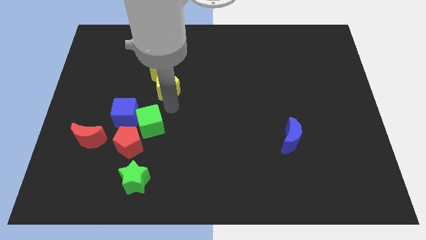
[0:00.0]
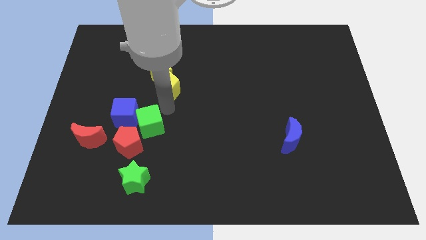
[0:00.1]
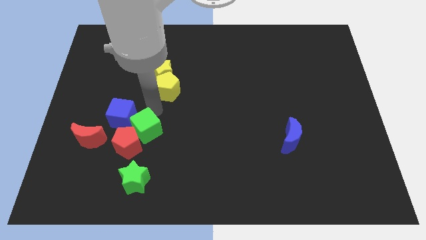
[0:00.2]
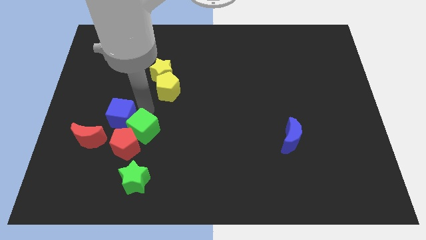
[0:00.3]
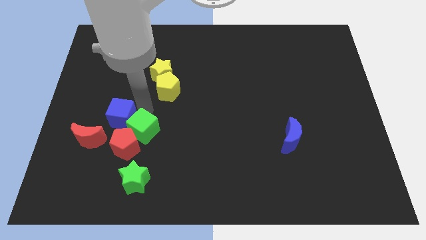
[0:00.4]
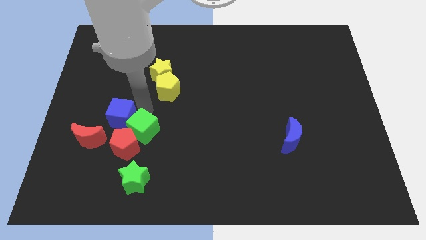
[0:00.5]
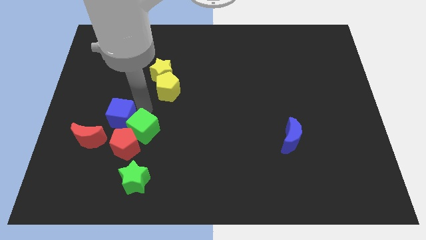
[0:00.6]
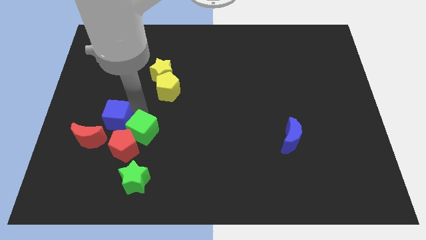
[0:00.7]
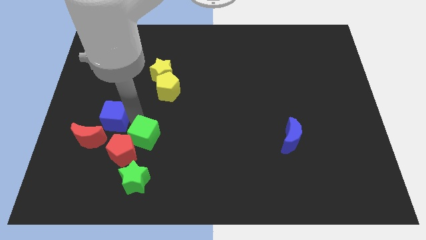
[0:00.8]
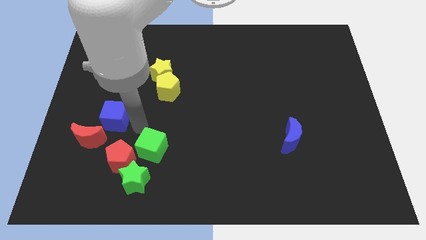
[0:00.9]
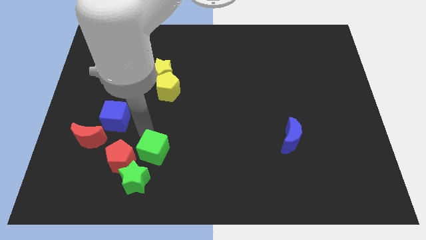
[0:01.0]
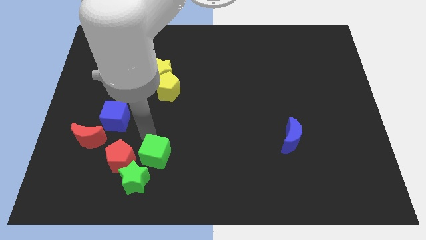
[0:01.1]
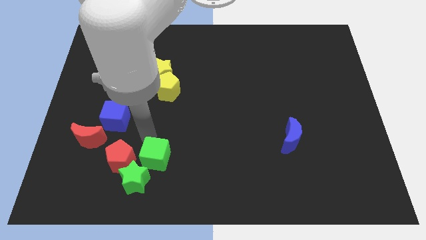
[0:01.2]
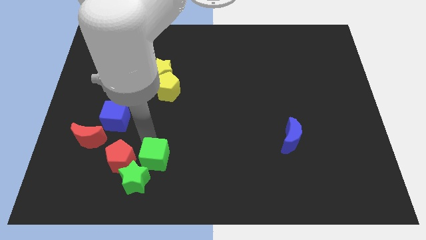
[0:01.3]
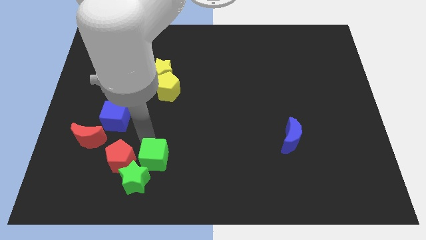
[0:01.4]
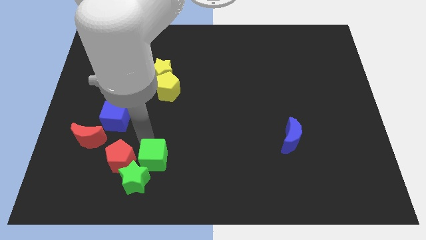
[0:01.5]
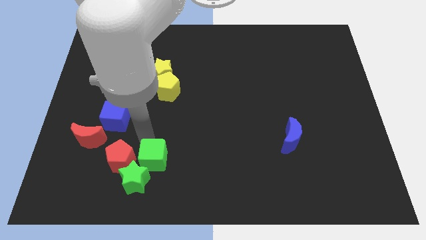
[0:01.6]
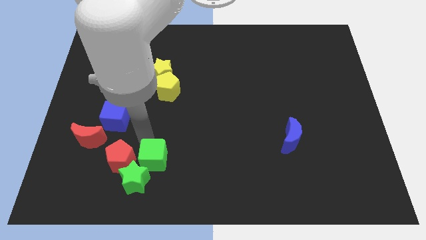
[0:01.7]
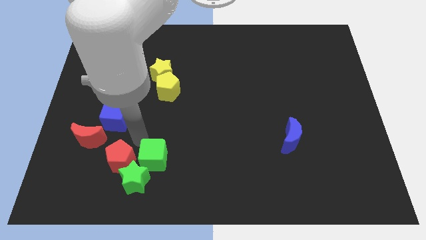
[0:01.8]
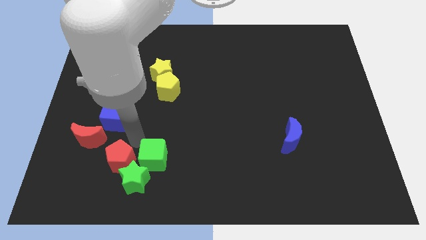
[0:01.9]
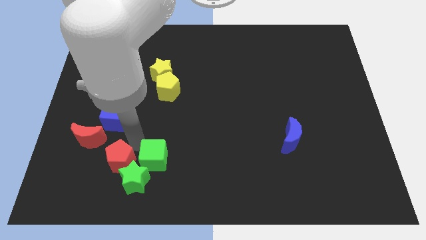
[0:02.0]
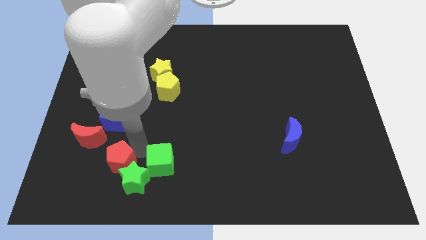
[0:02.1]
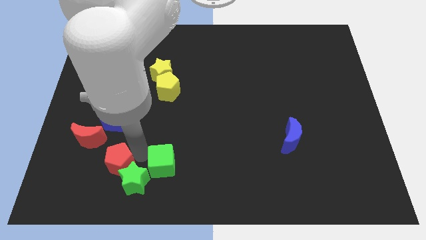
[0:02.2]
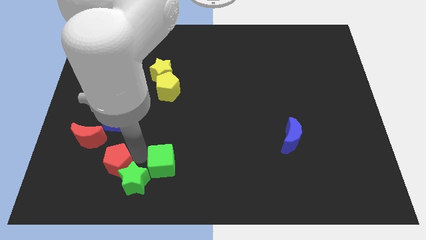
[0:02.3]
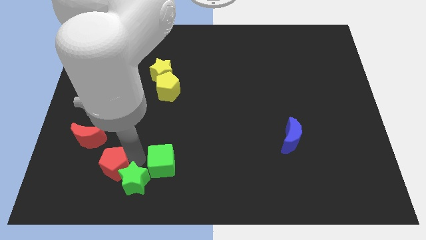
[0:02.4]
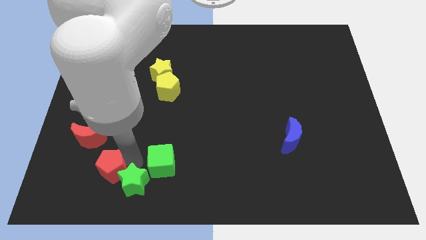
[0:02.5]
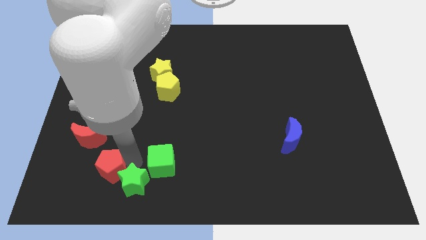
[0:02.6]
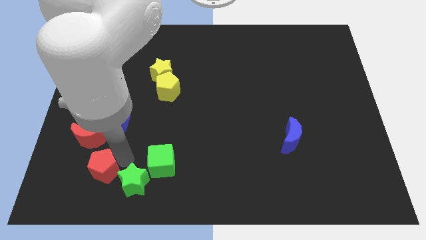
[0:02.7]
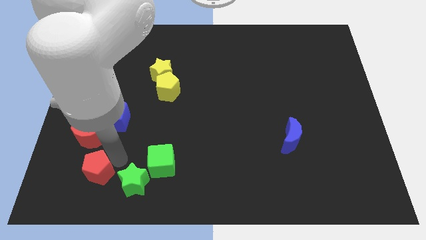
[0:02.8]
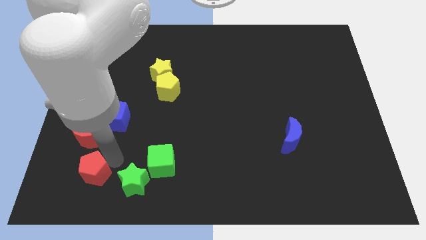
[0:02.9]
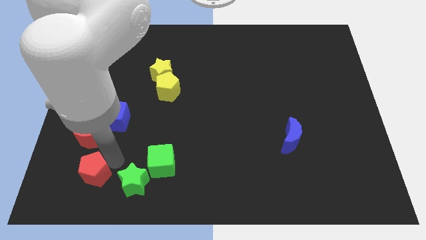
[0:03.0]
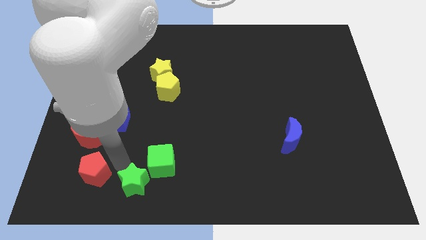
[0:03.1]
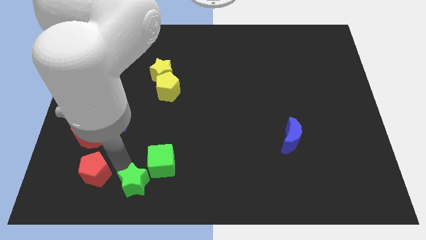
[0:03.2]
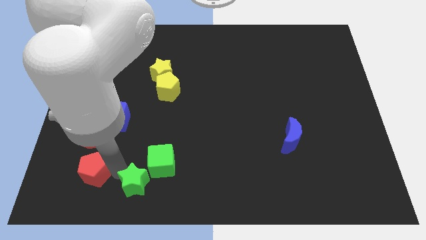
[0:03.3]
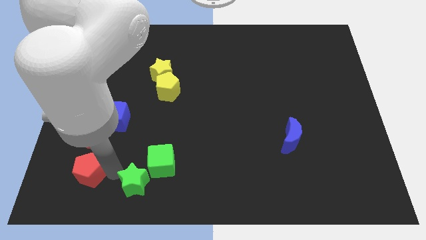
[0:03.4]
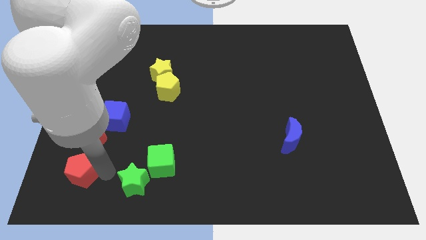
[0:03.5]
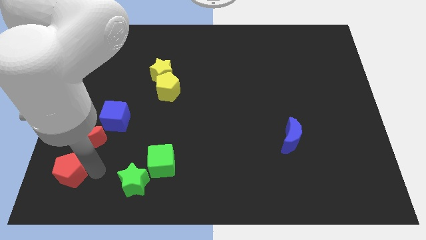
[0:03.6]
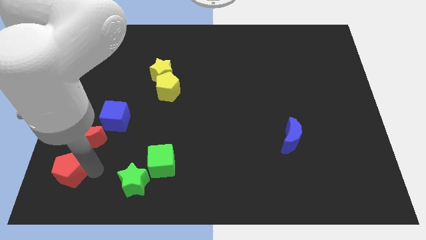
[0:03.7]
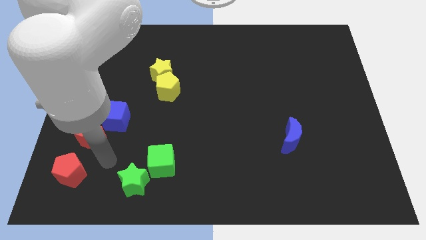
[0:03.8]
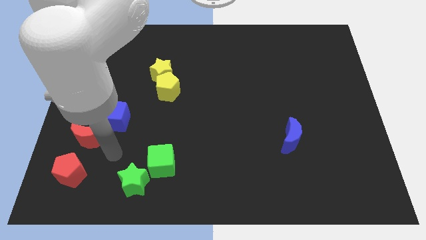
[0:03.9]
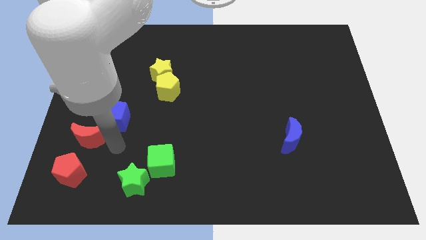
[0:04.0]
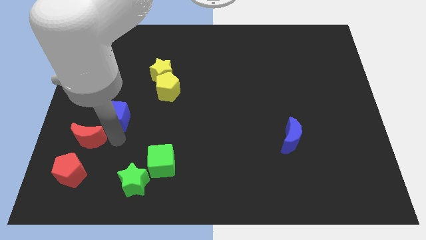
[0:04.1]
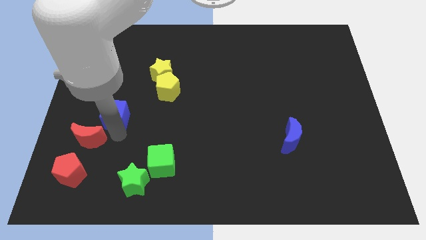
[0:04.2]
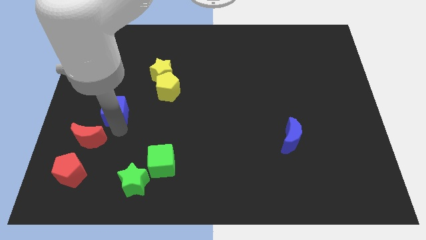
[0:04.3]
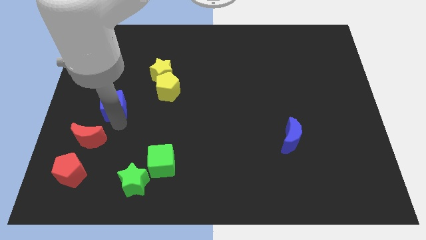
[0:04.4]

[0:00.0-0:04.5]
separate the green blocks and red blocks

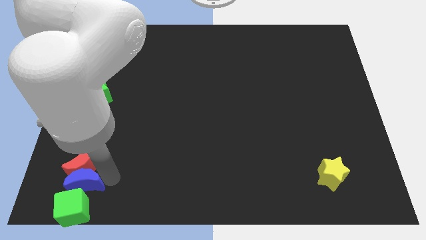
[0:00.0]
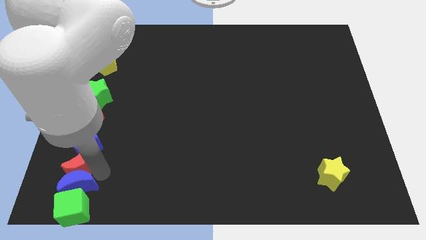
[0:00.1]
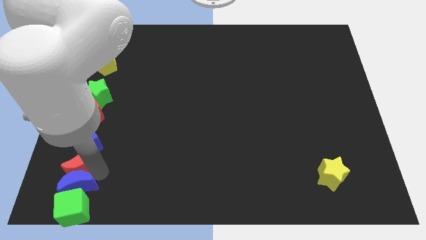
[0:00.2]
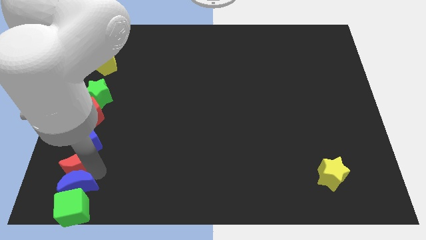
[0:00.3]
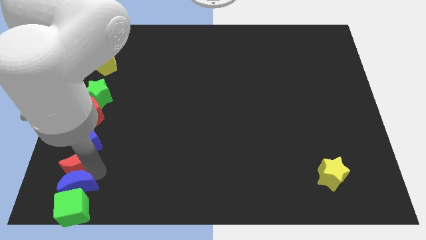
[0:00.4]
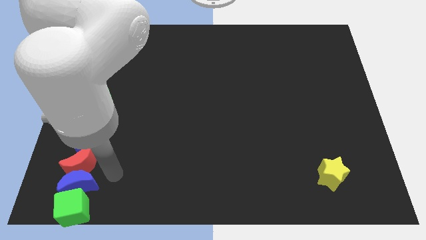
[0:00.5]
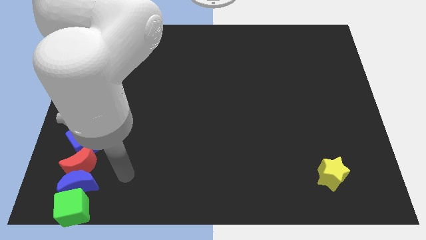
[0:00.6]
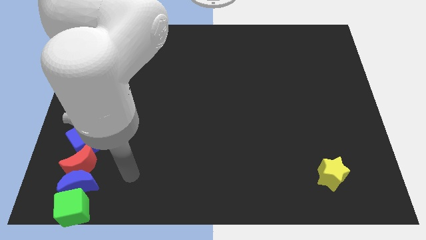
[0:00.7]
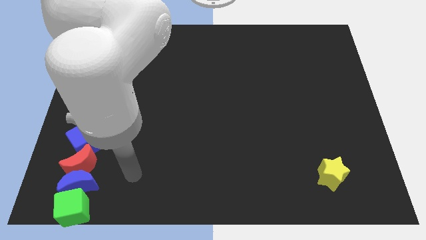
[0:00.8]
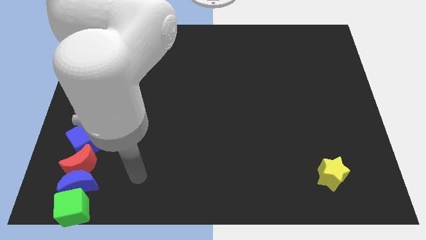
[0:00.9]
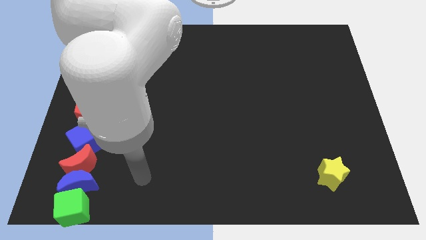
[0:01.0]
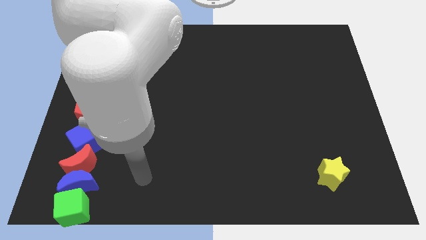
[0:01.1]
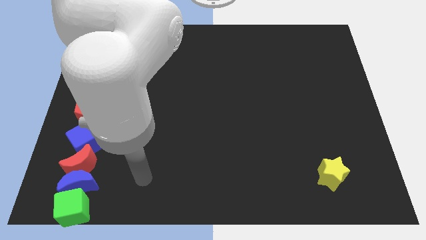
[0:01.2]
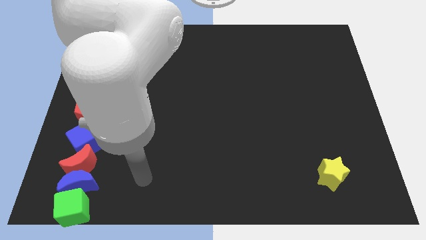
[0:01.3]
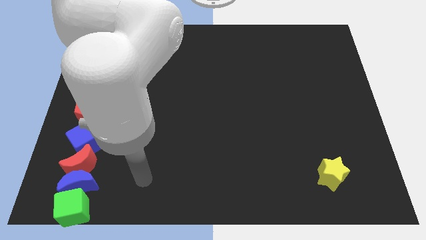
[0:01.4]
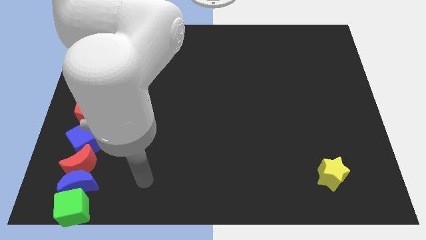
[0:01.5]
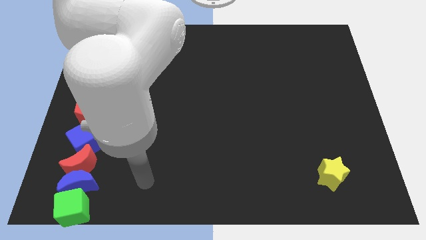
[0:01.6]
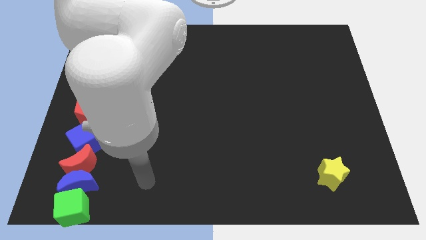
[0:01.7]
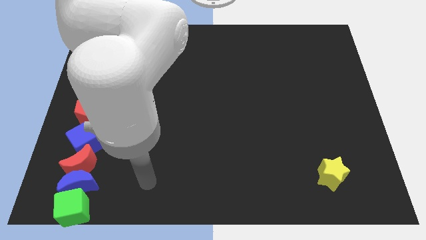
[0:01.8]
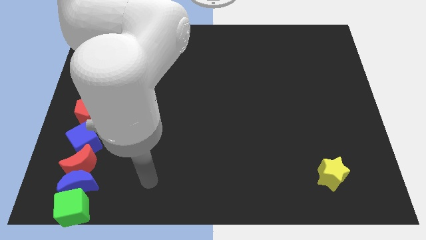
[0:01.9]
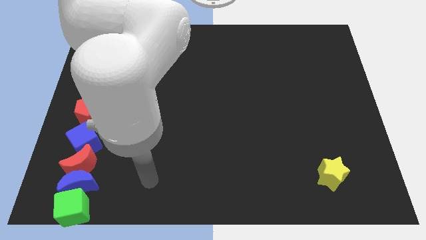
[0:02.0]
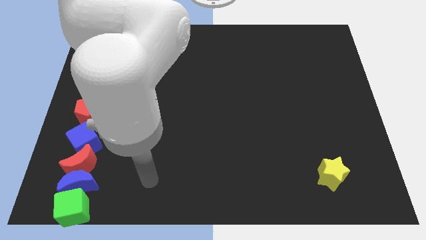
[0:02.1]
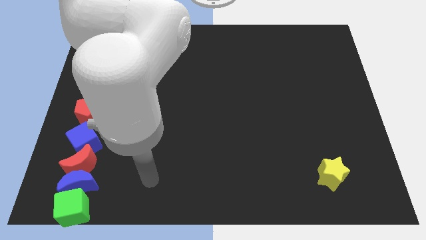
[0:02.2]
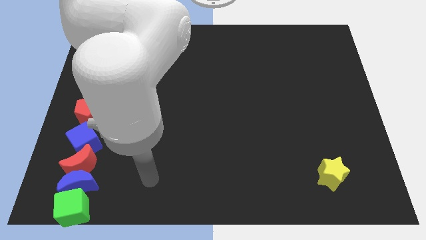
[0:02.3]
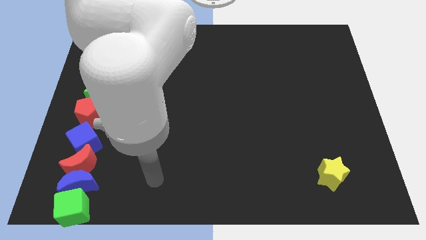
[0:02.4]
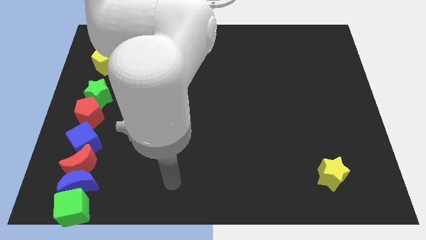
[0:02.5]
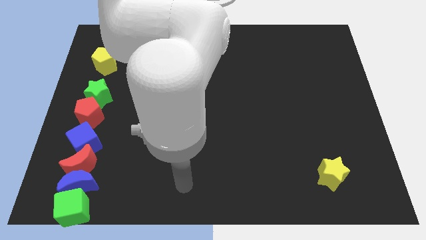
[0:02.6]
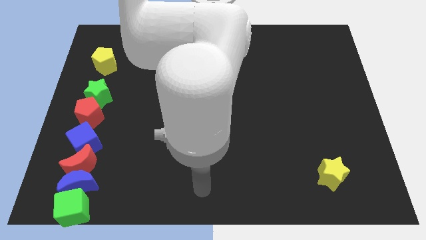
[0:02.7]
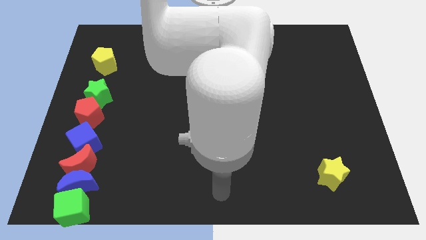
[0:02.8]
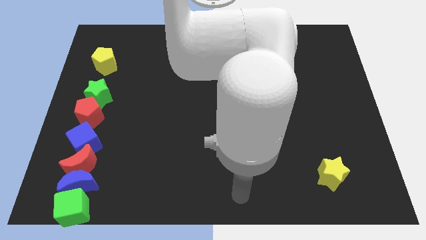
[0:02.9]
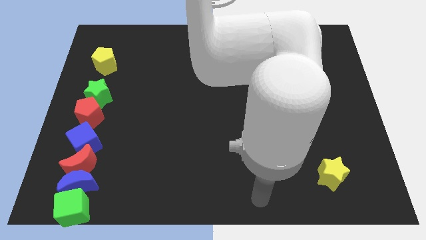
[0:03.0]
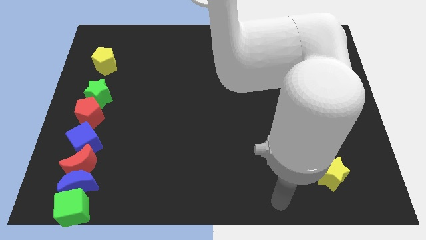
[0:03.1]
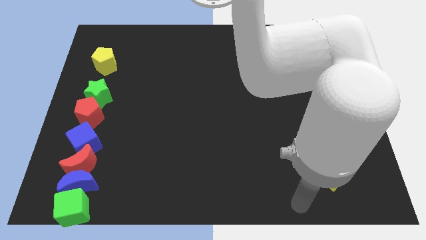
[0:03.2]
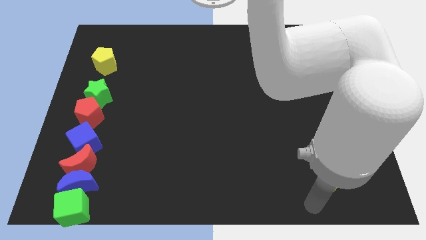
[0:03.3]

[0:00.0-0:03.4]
move the arm away from the red moon

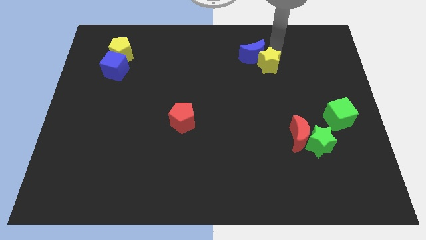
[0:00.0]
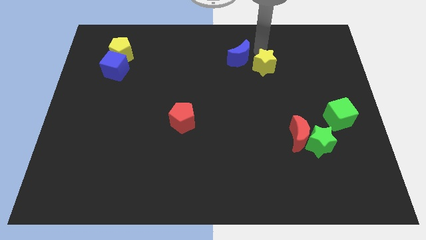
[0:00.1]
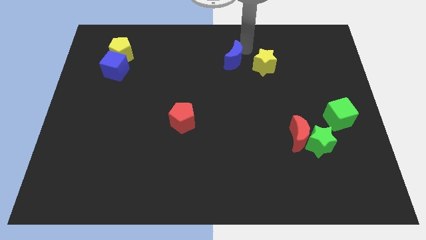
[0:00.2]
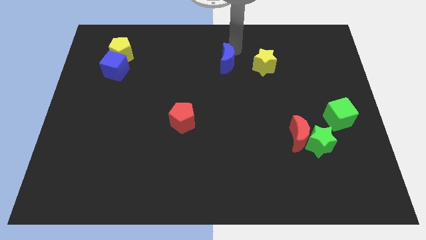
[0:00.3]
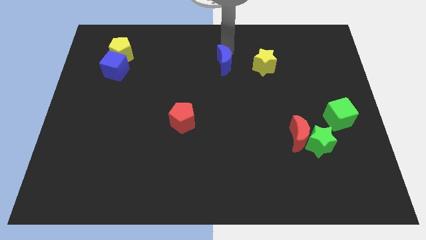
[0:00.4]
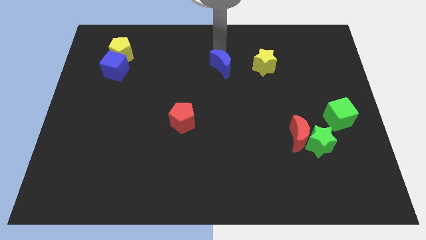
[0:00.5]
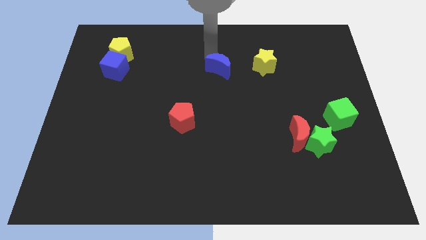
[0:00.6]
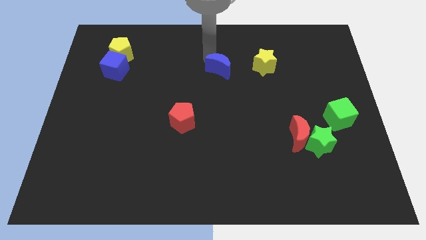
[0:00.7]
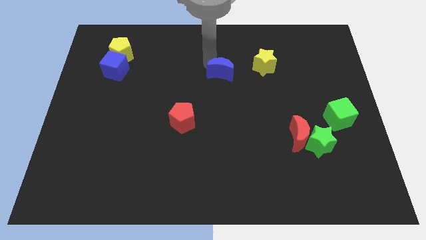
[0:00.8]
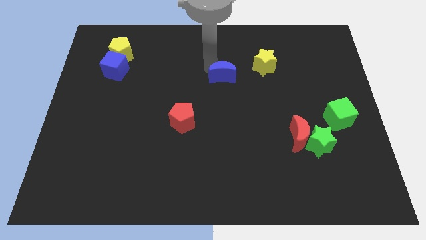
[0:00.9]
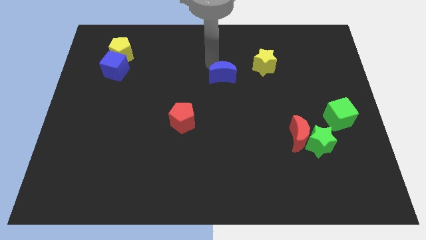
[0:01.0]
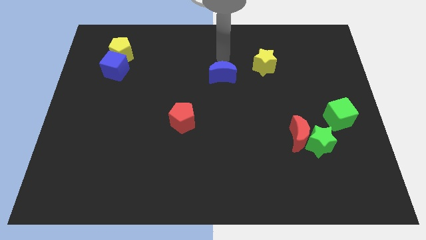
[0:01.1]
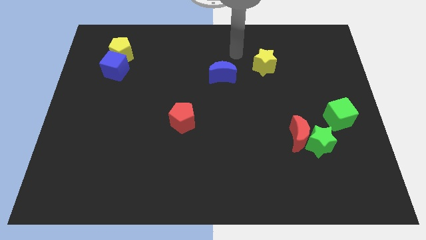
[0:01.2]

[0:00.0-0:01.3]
separate the blue crescent from yellow star
